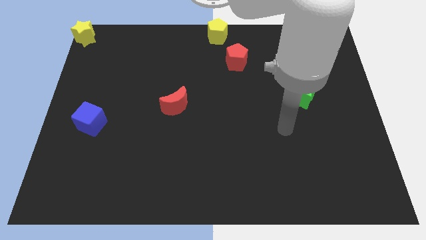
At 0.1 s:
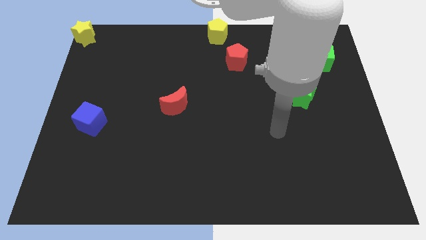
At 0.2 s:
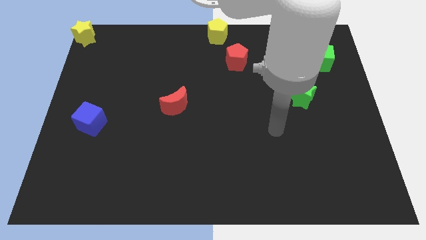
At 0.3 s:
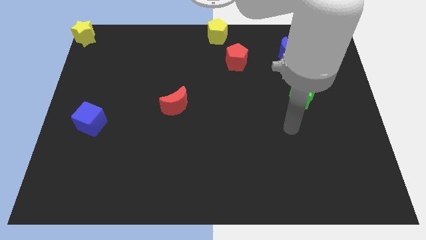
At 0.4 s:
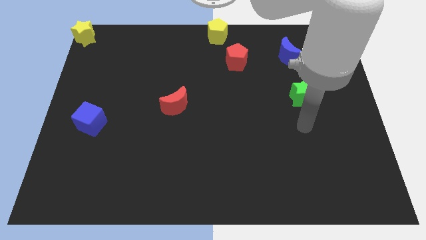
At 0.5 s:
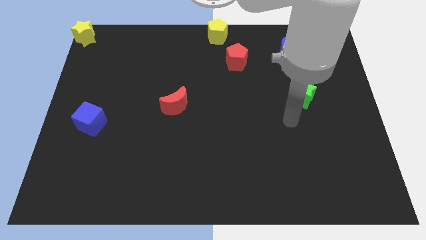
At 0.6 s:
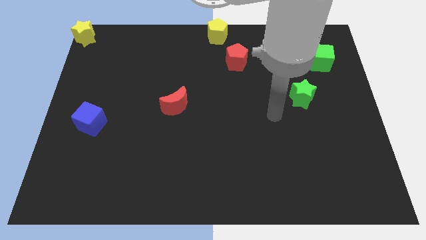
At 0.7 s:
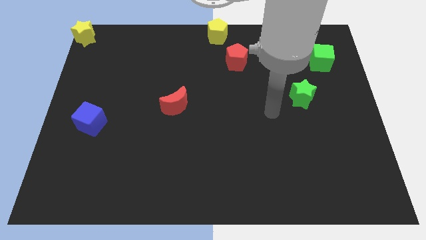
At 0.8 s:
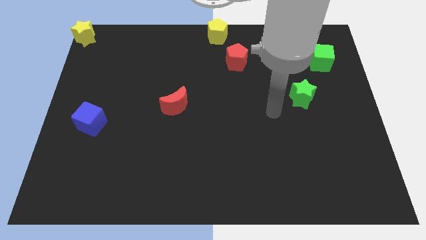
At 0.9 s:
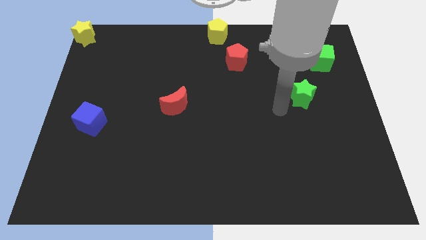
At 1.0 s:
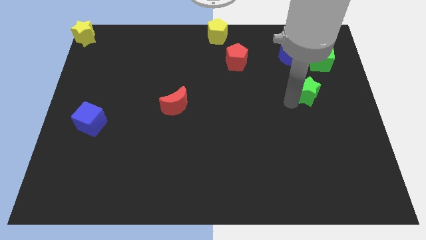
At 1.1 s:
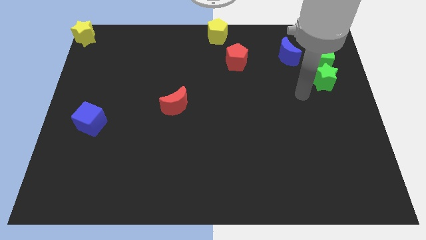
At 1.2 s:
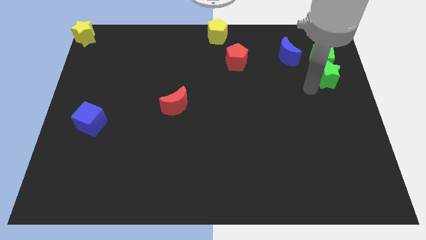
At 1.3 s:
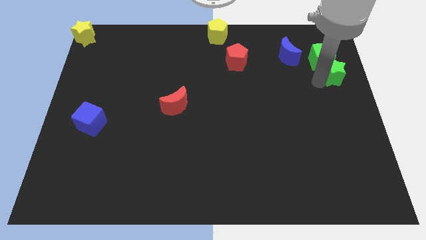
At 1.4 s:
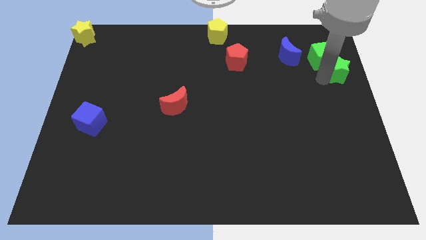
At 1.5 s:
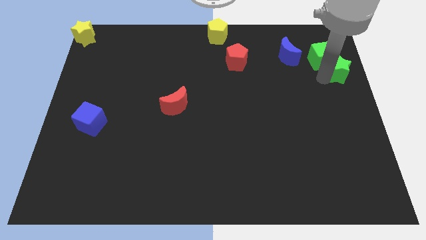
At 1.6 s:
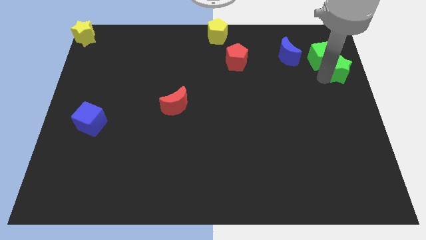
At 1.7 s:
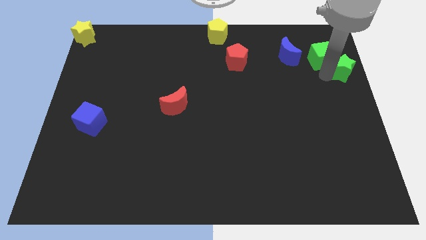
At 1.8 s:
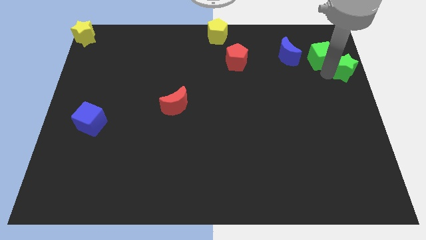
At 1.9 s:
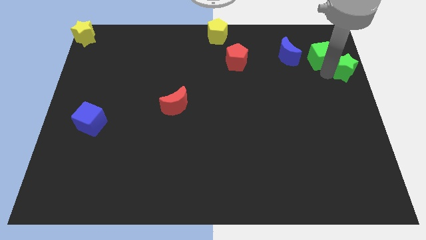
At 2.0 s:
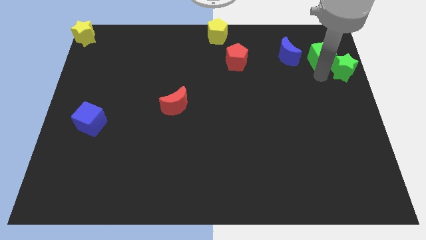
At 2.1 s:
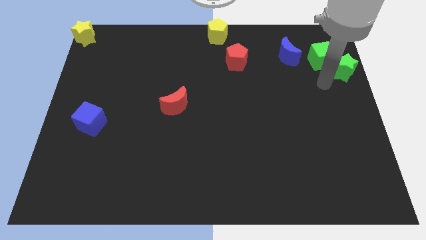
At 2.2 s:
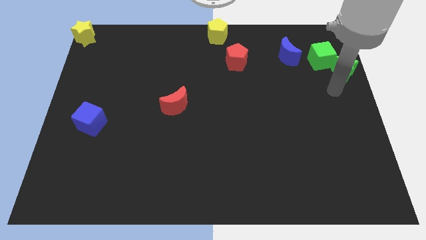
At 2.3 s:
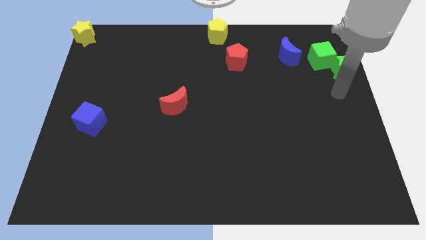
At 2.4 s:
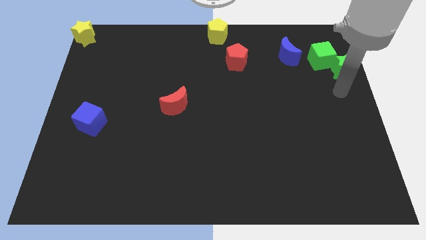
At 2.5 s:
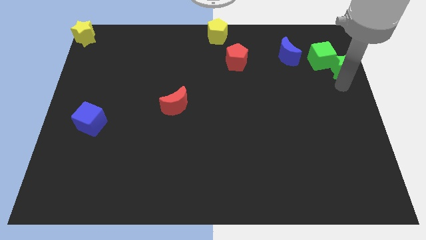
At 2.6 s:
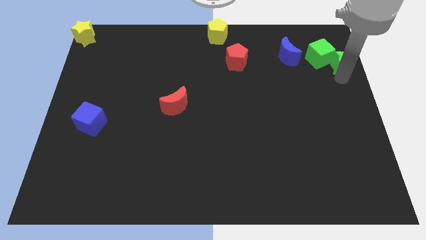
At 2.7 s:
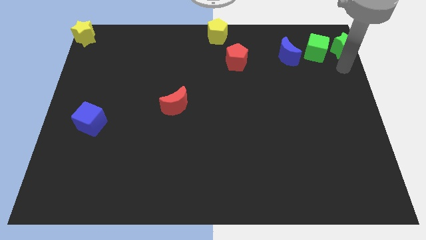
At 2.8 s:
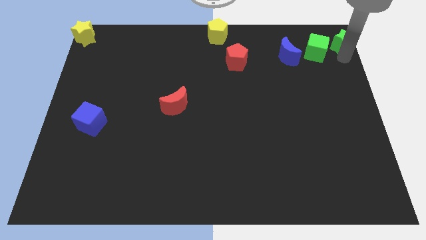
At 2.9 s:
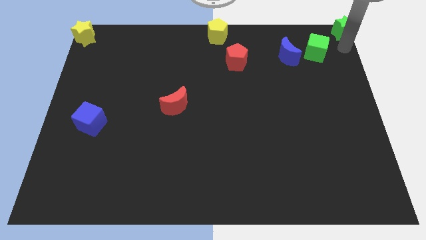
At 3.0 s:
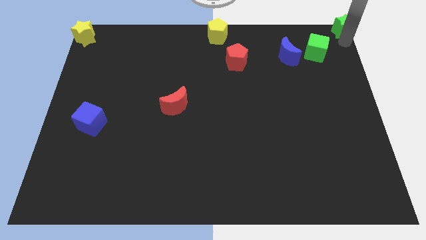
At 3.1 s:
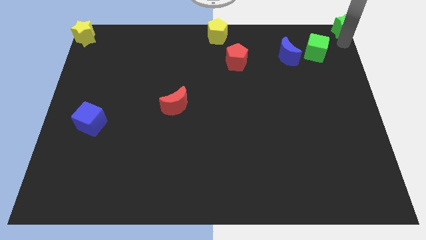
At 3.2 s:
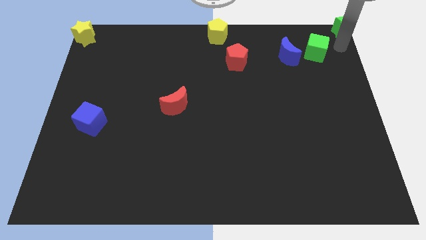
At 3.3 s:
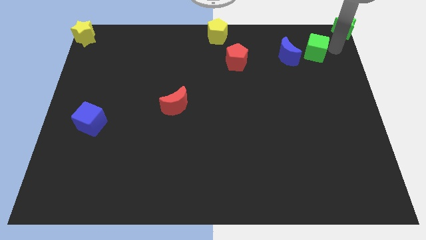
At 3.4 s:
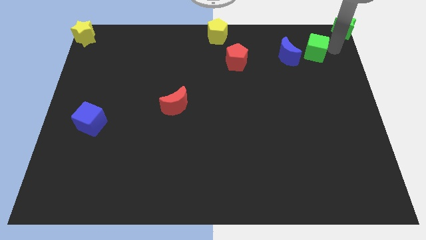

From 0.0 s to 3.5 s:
slide the green star to the top right of the board

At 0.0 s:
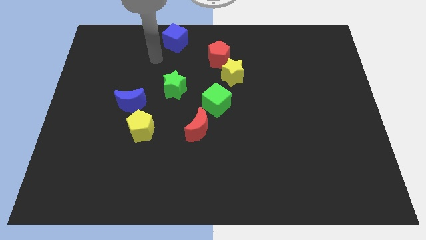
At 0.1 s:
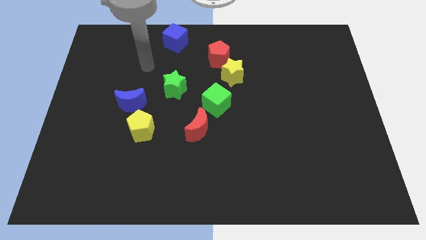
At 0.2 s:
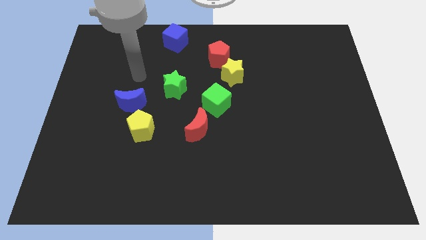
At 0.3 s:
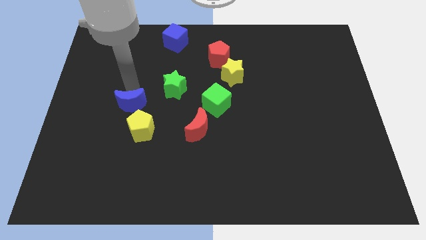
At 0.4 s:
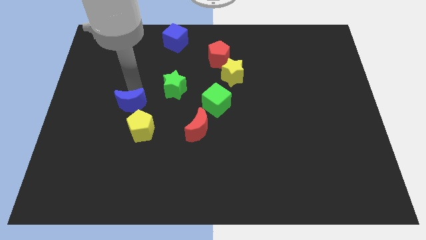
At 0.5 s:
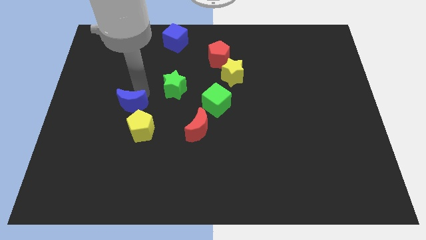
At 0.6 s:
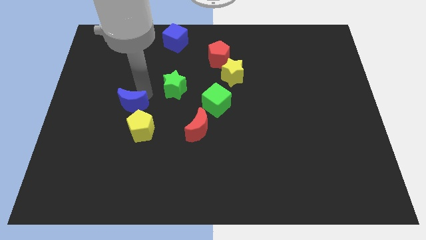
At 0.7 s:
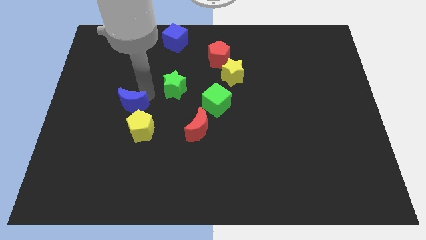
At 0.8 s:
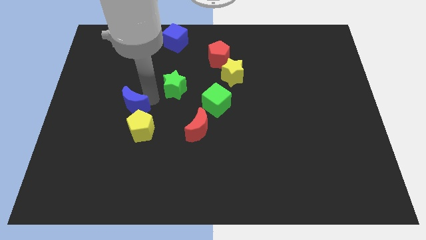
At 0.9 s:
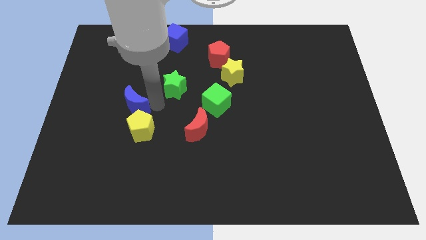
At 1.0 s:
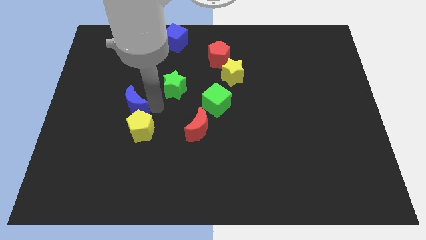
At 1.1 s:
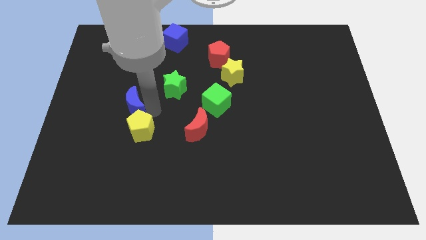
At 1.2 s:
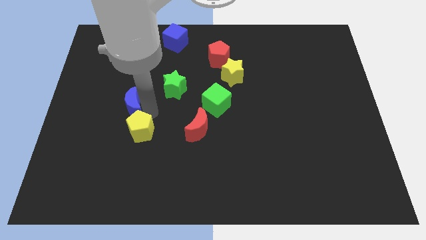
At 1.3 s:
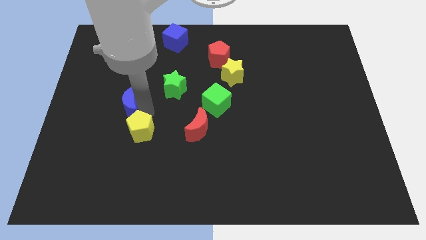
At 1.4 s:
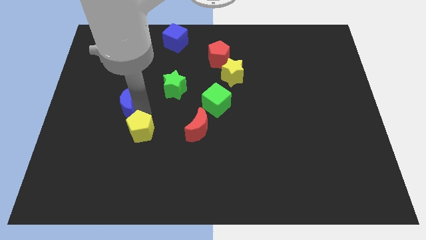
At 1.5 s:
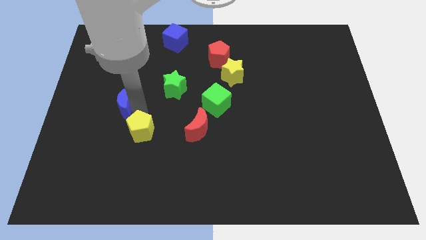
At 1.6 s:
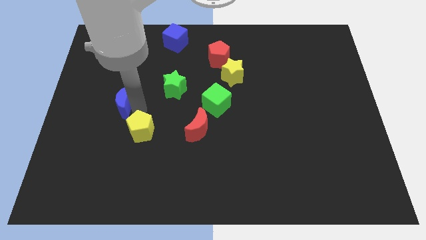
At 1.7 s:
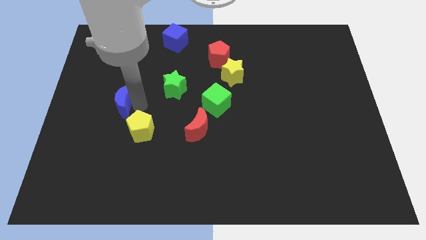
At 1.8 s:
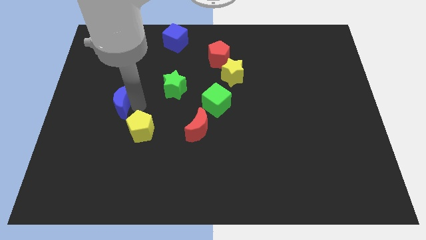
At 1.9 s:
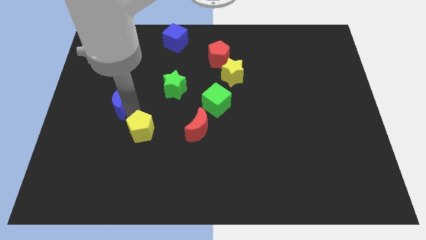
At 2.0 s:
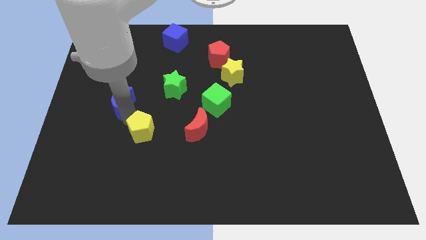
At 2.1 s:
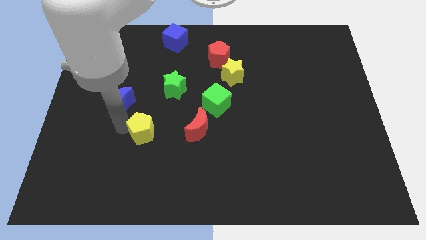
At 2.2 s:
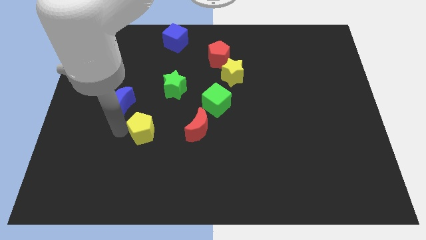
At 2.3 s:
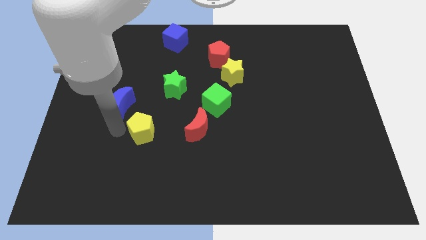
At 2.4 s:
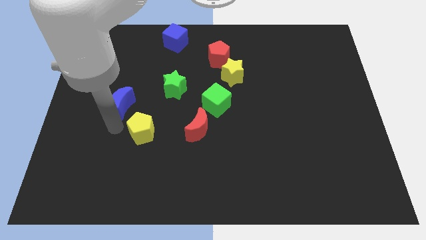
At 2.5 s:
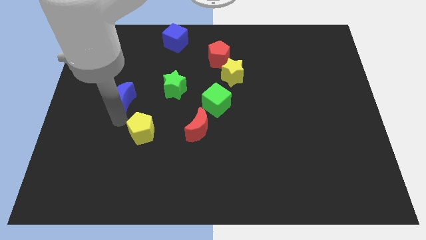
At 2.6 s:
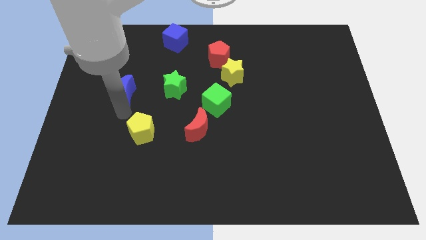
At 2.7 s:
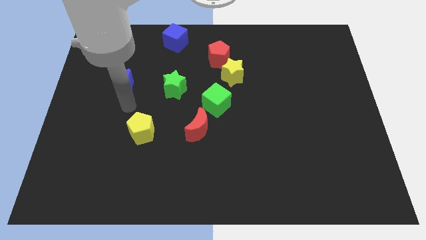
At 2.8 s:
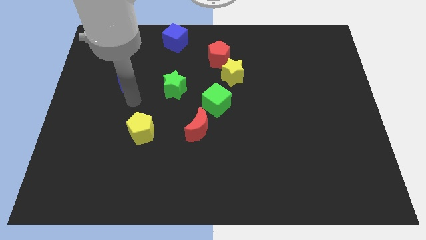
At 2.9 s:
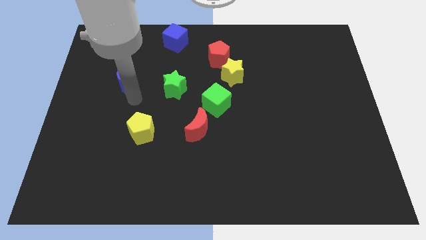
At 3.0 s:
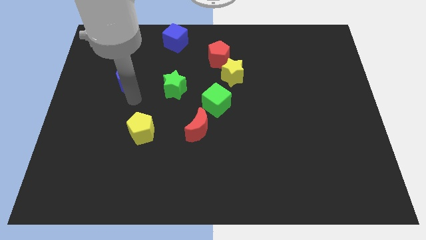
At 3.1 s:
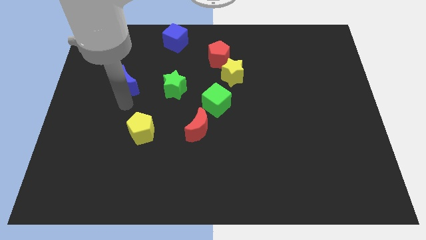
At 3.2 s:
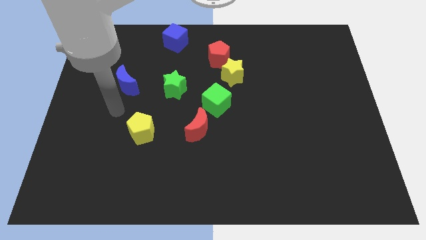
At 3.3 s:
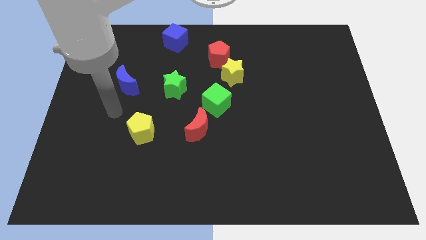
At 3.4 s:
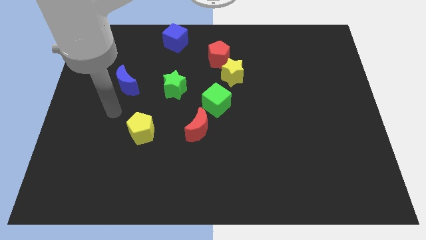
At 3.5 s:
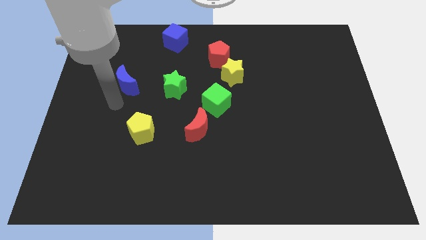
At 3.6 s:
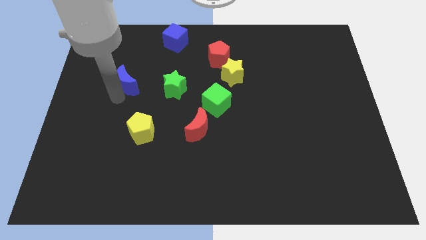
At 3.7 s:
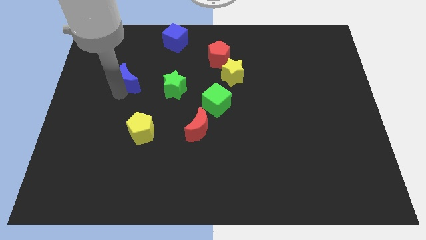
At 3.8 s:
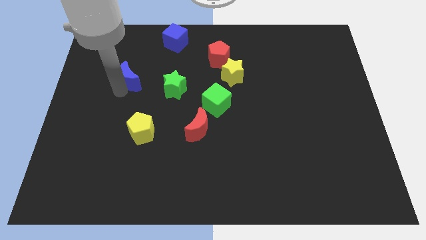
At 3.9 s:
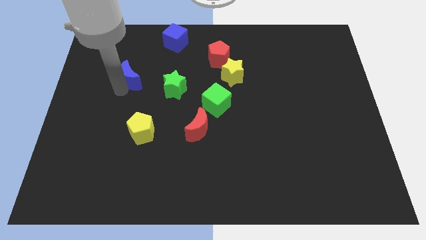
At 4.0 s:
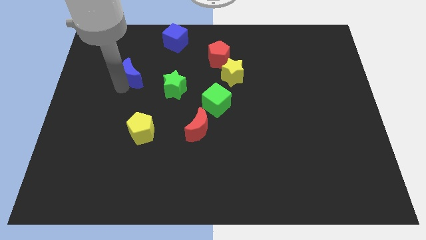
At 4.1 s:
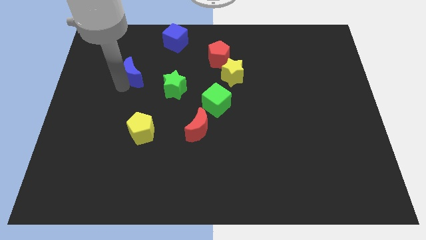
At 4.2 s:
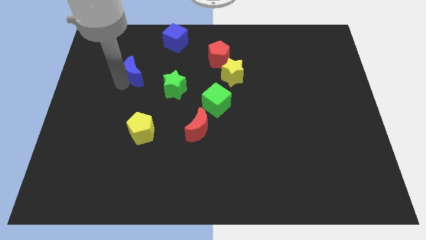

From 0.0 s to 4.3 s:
push the blue moon closer to the blue cube

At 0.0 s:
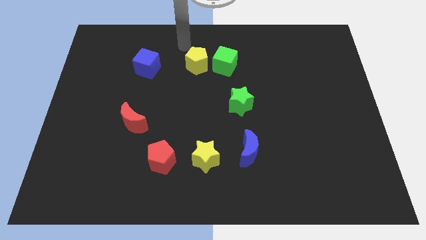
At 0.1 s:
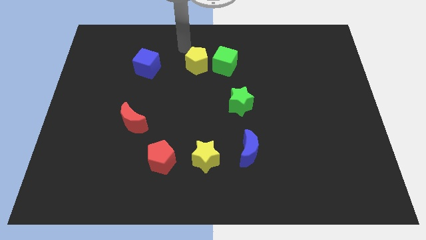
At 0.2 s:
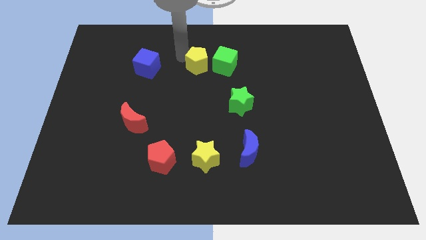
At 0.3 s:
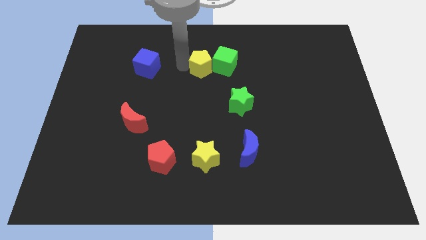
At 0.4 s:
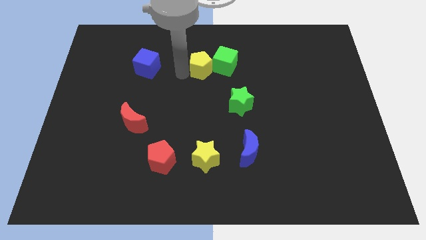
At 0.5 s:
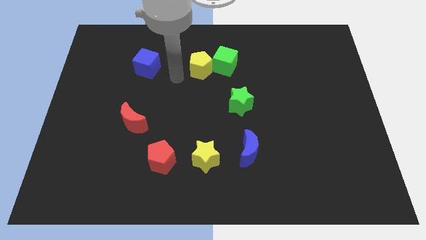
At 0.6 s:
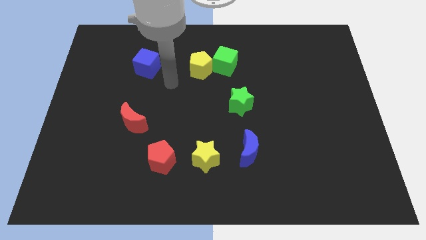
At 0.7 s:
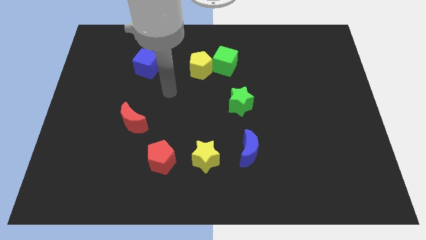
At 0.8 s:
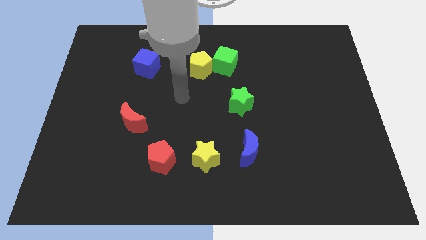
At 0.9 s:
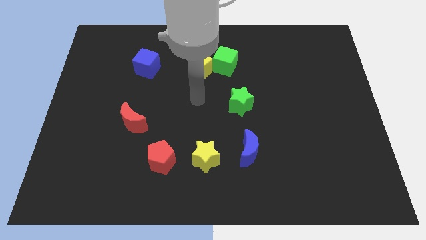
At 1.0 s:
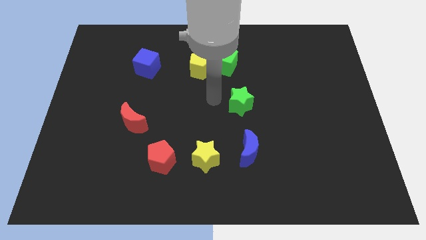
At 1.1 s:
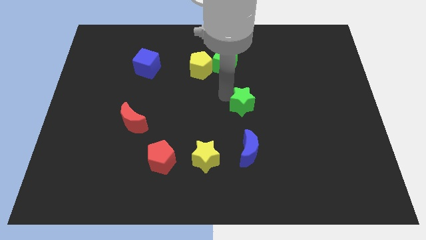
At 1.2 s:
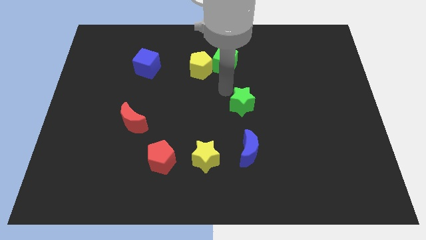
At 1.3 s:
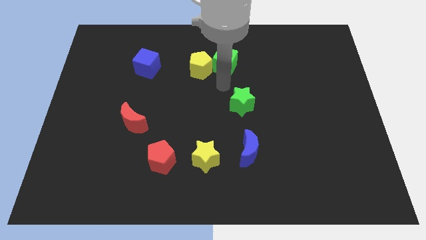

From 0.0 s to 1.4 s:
push the yellow pentagon into green cube
